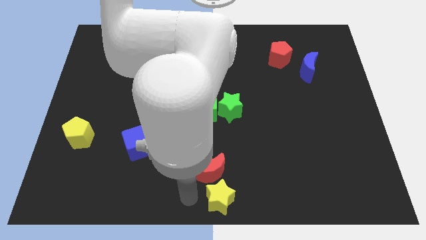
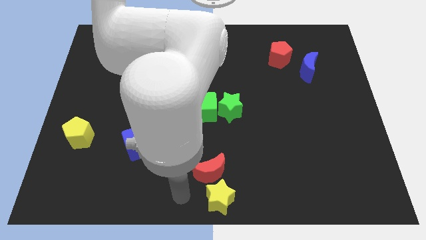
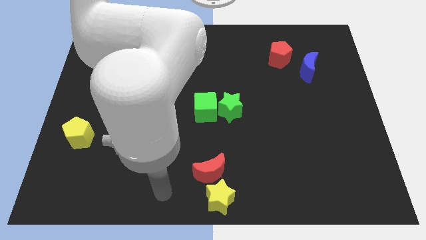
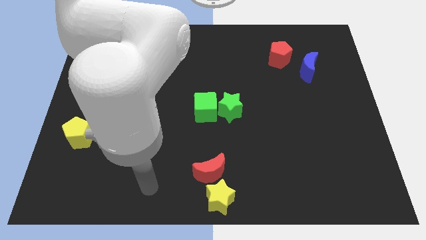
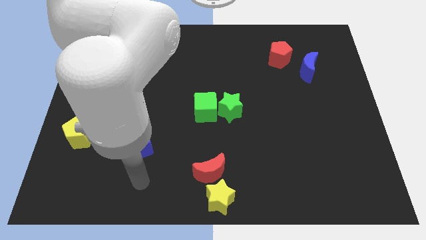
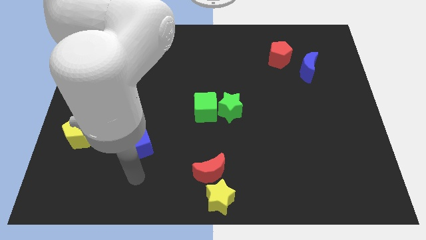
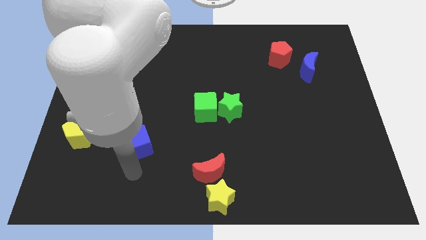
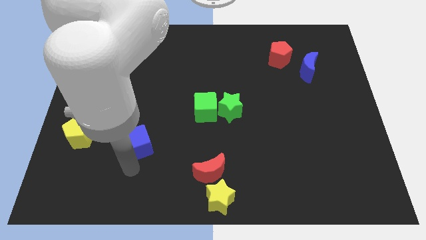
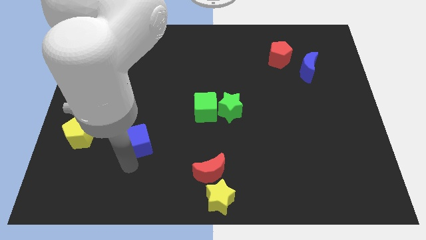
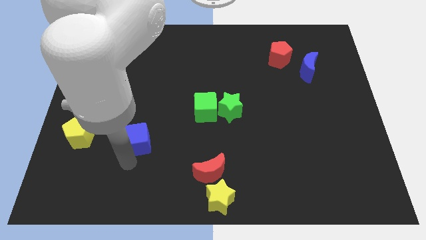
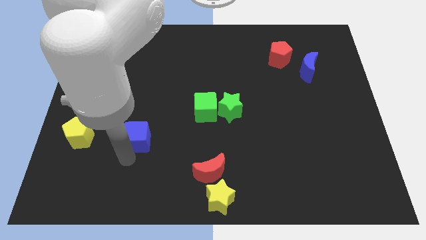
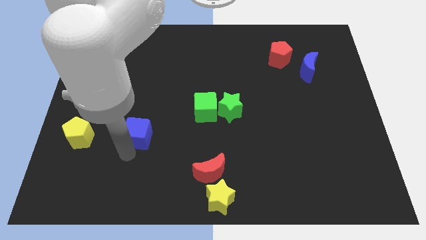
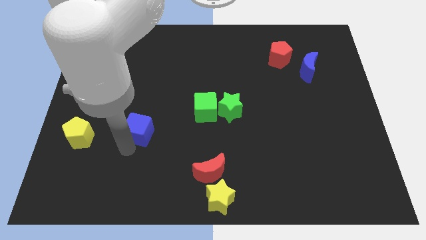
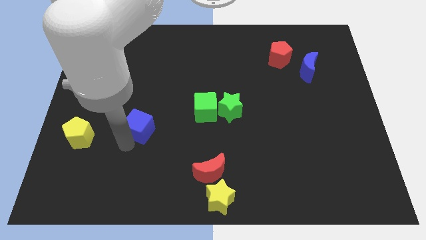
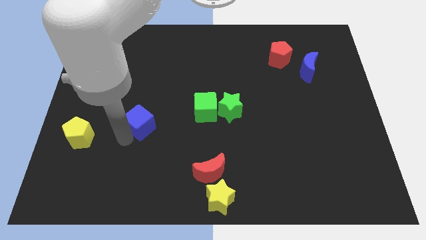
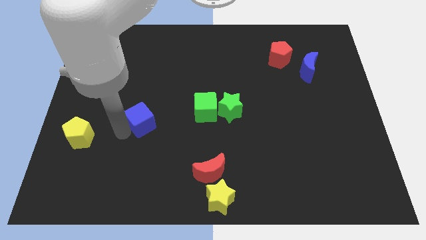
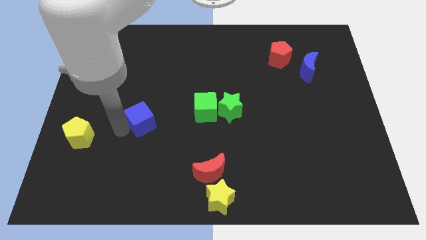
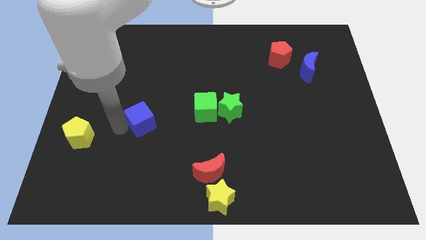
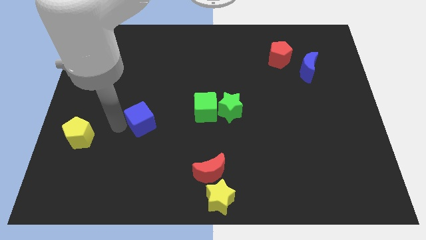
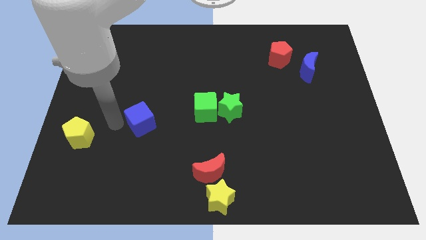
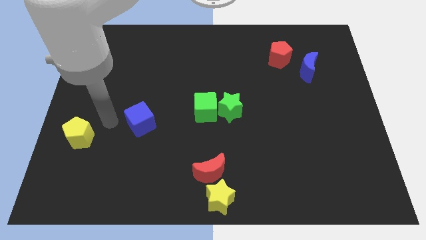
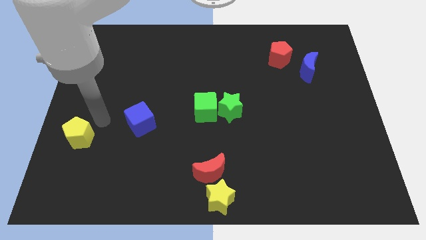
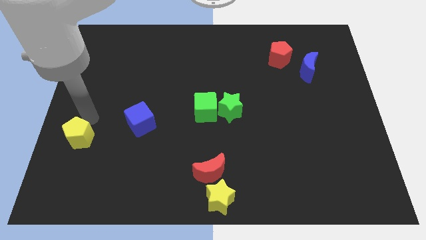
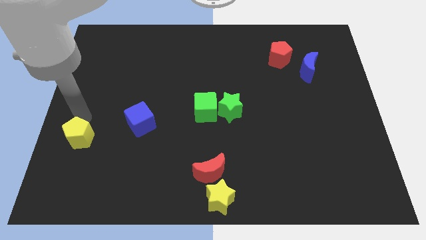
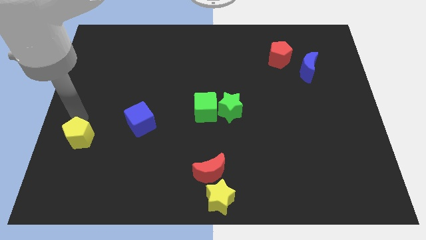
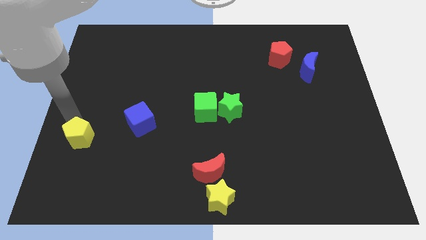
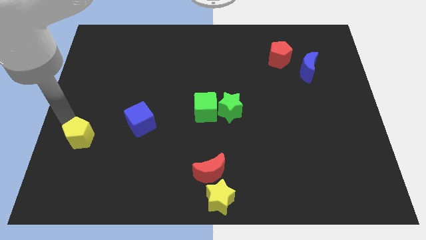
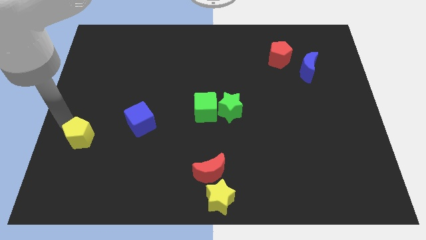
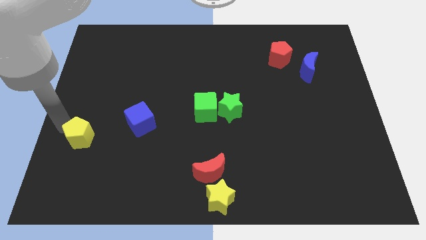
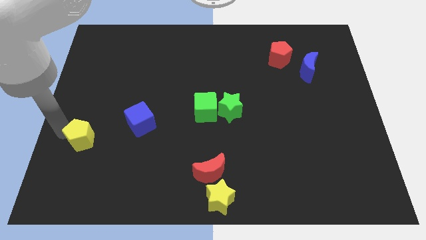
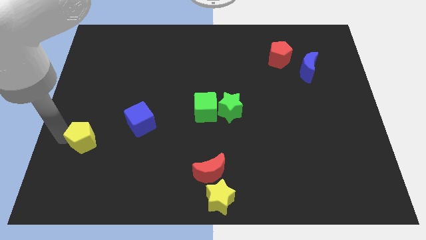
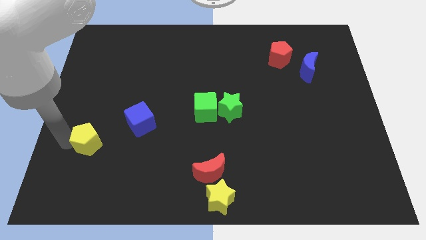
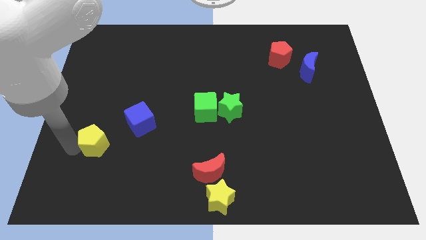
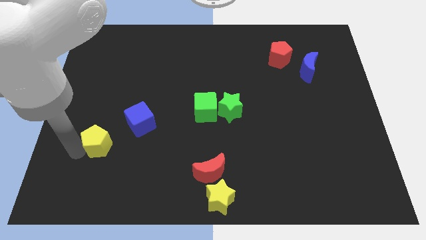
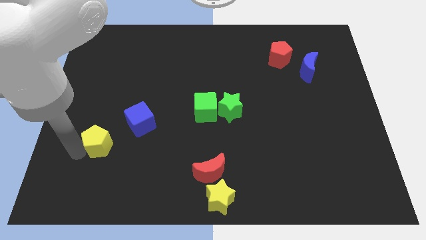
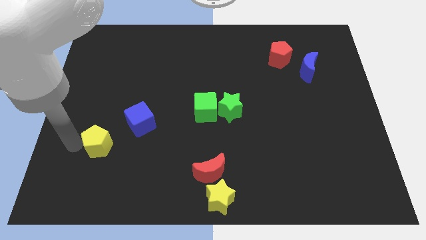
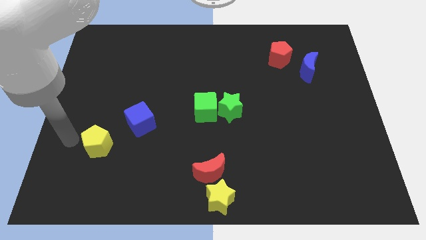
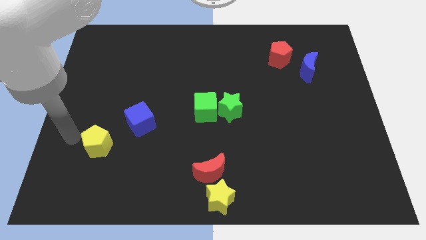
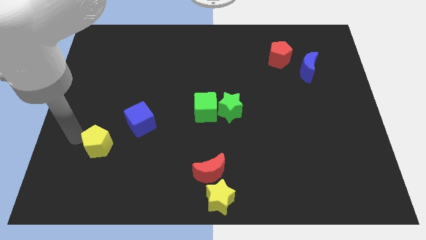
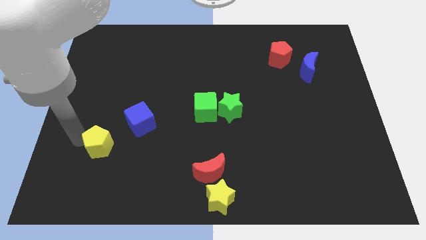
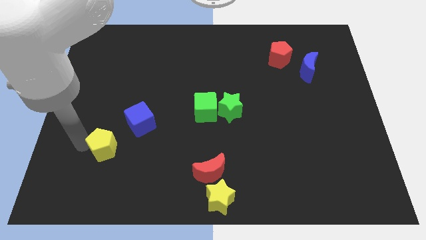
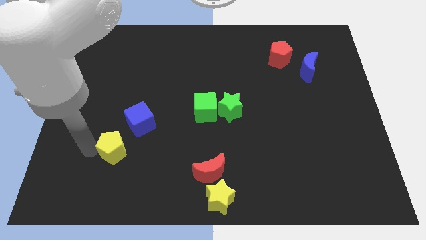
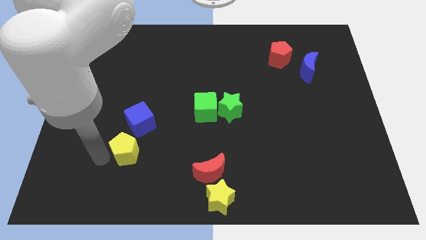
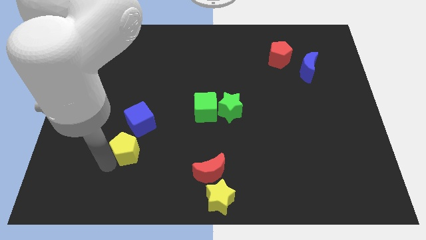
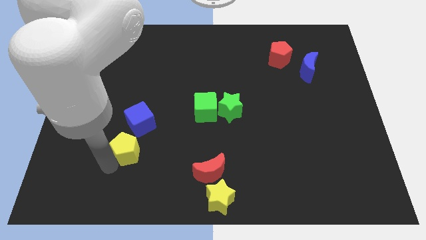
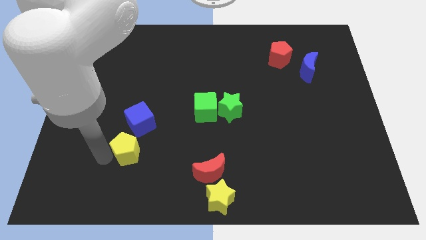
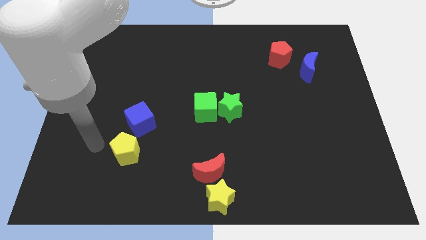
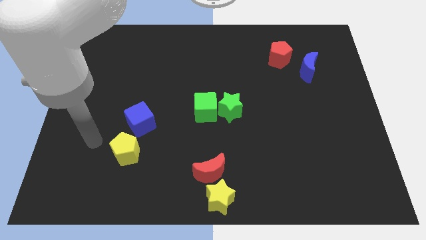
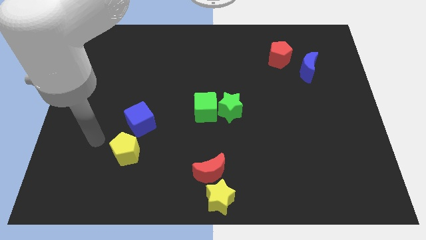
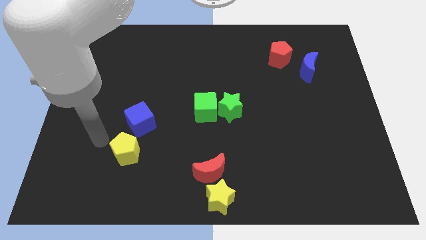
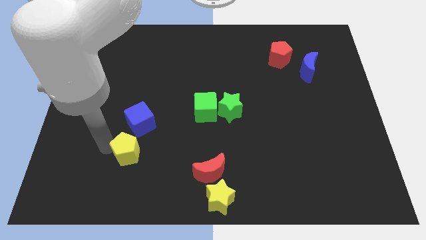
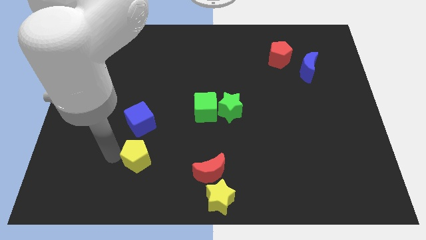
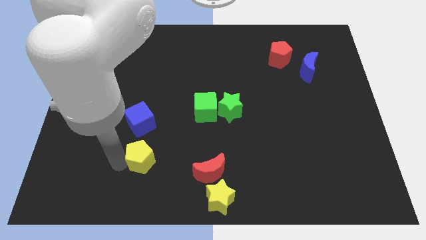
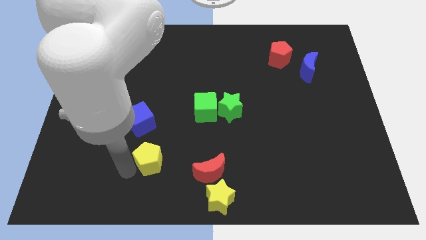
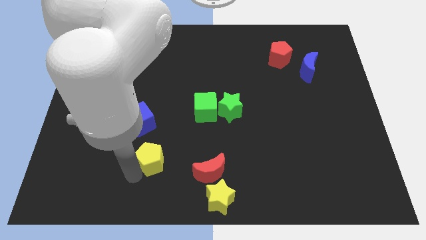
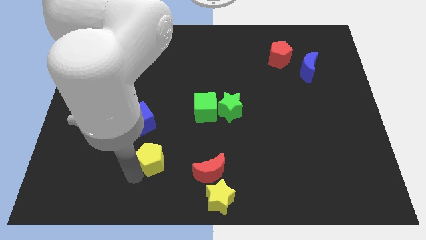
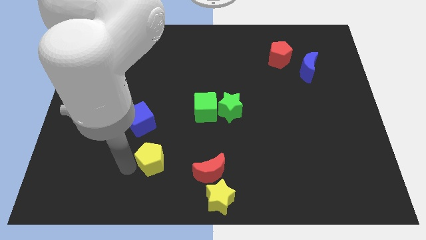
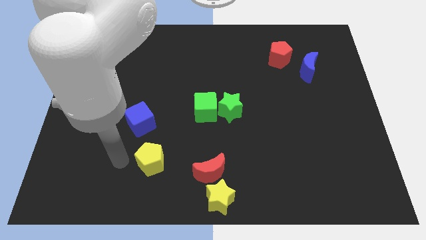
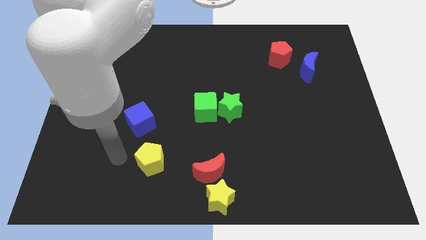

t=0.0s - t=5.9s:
place the yellow pentagon at the bottom side of the blue cube

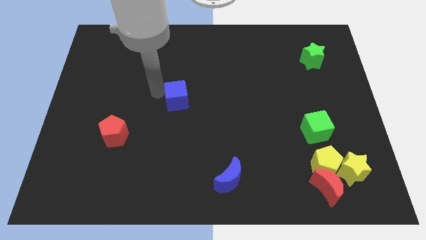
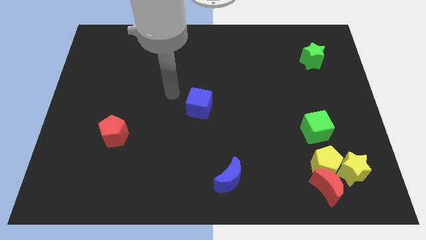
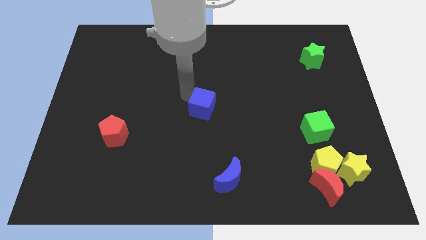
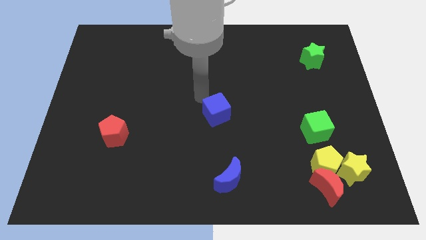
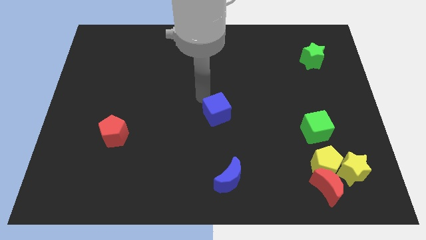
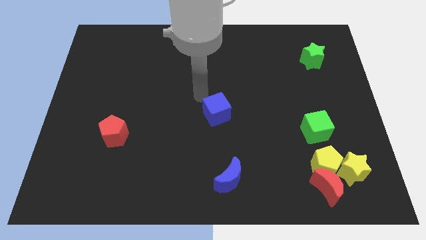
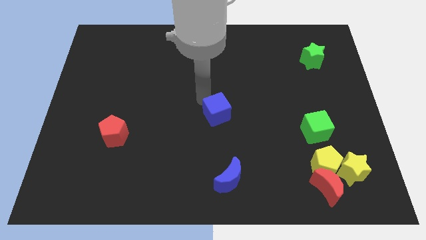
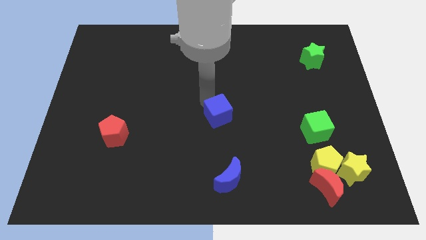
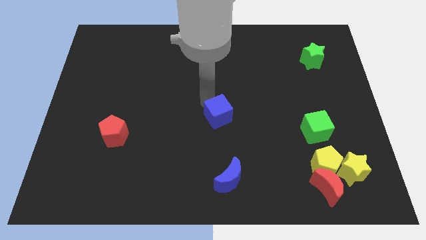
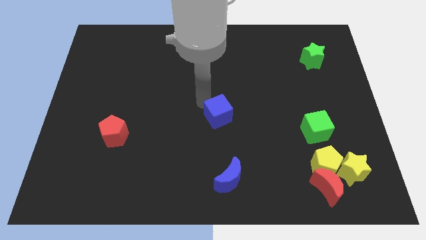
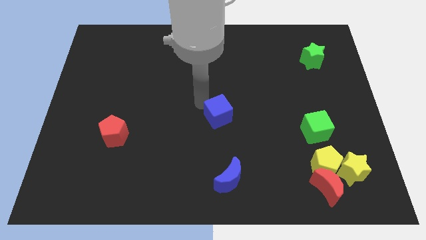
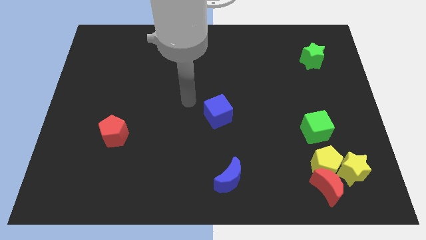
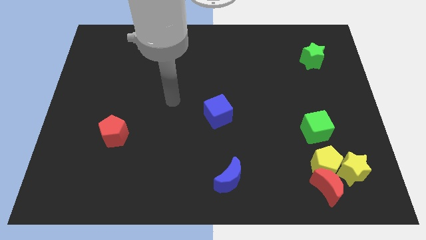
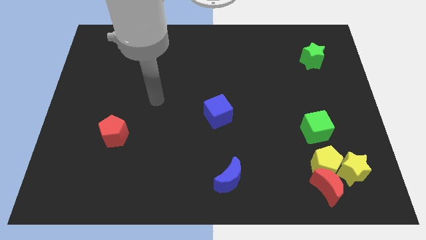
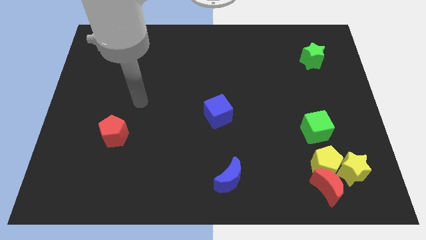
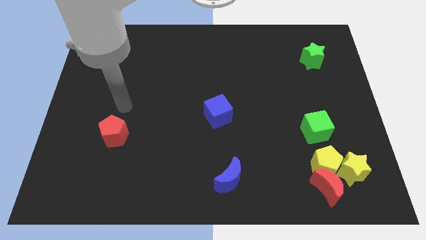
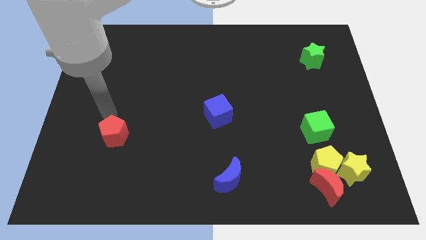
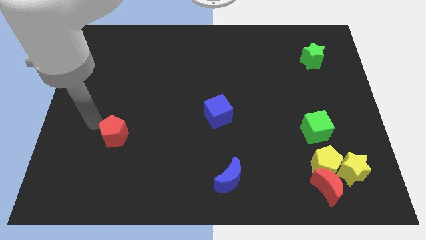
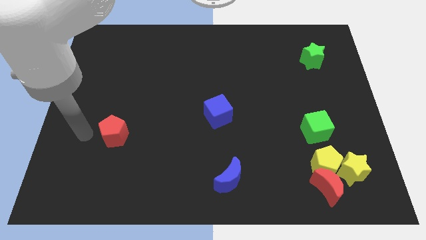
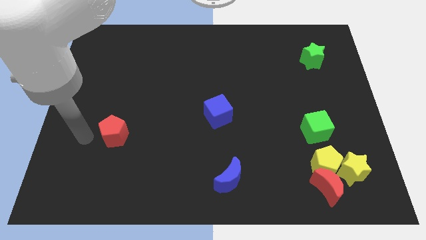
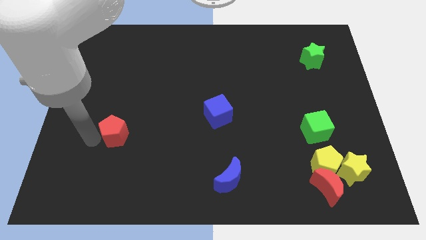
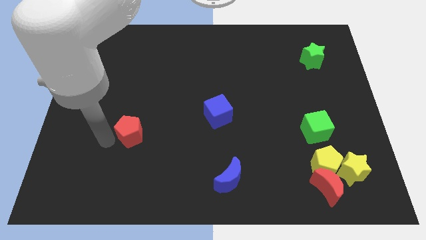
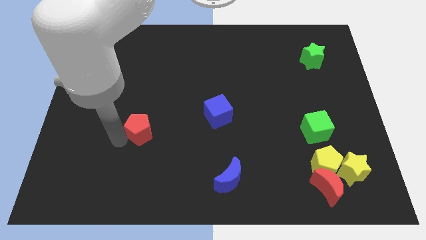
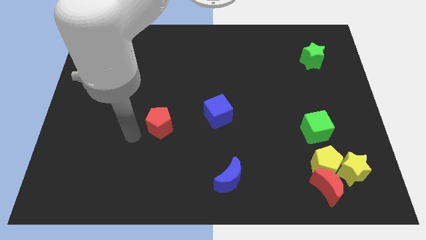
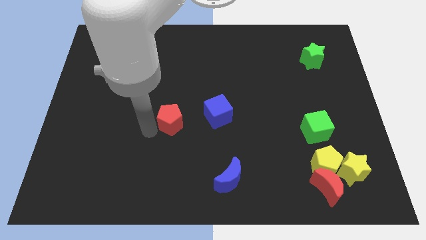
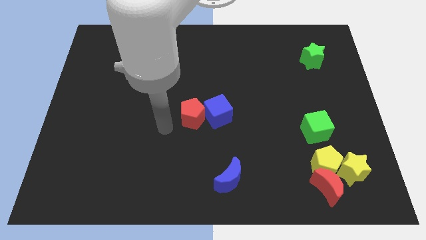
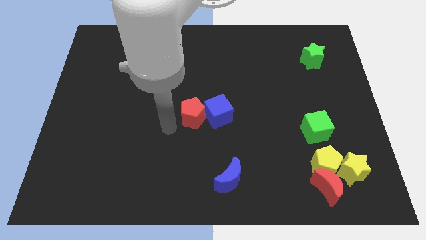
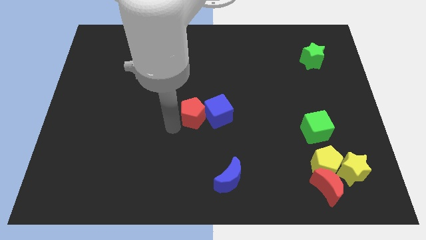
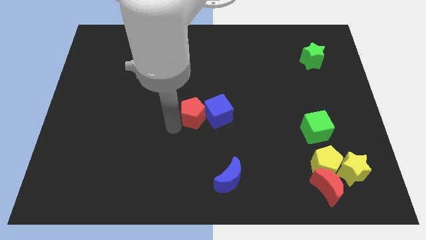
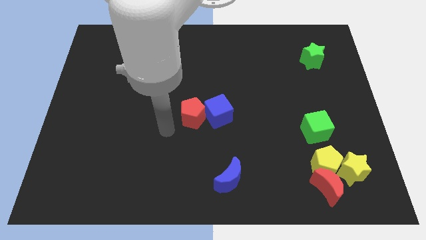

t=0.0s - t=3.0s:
push red pentagon near blue cube
